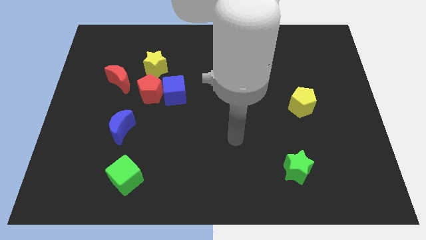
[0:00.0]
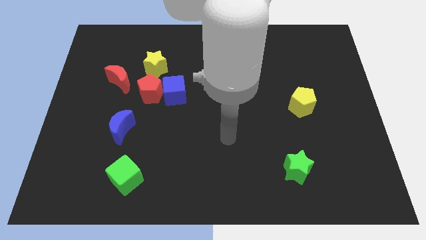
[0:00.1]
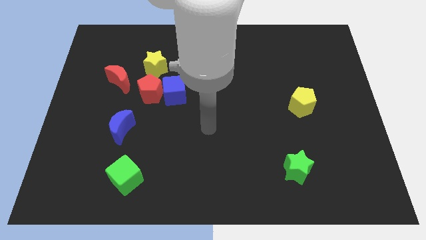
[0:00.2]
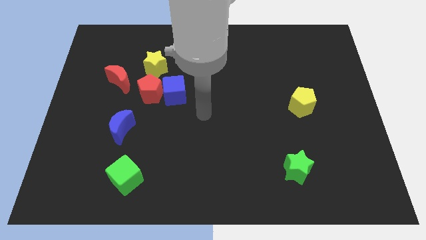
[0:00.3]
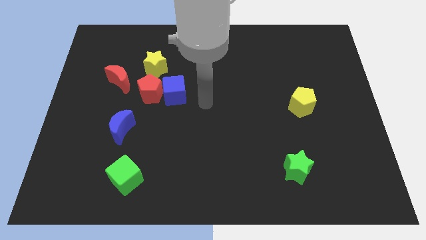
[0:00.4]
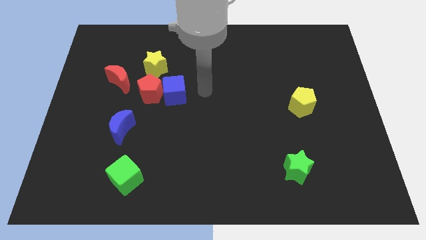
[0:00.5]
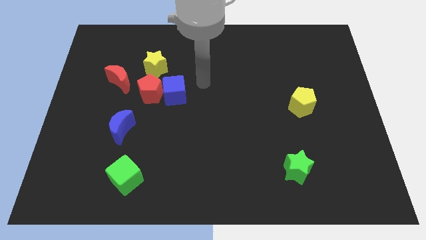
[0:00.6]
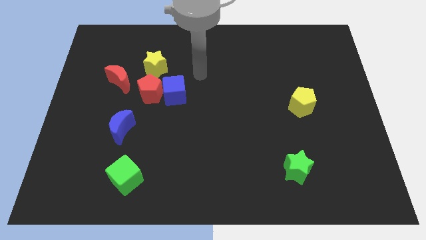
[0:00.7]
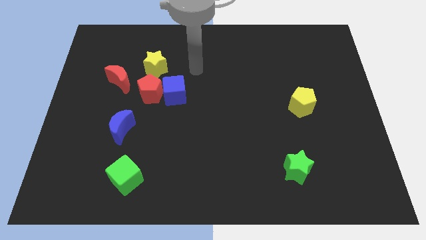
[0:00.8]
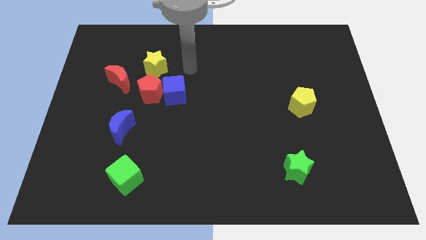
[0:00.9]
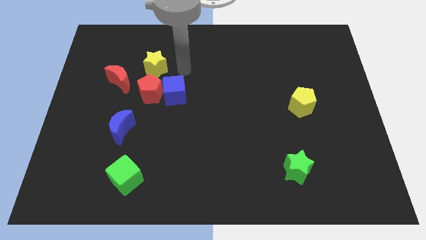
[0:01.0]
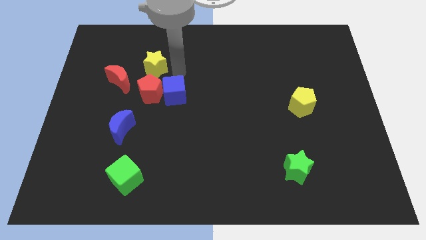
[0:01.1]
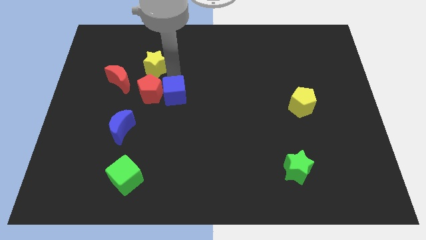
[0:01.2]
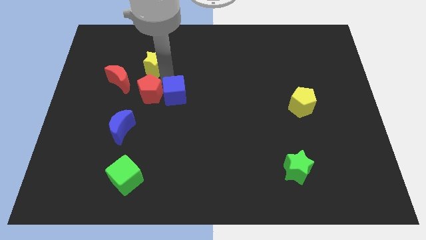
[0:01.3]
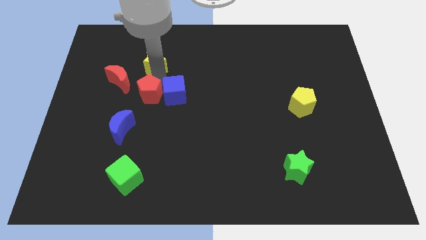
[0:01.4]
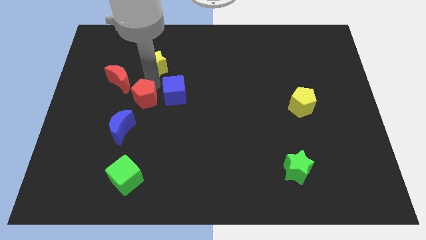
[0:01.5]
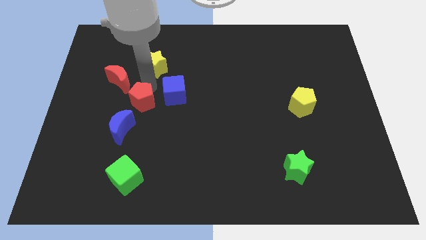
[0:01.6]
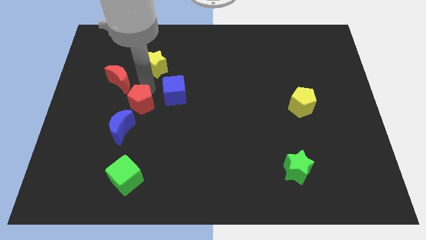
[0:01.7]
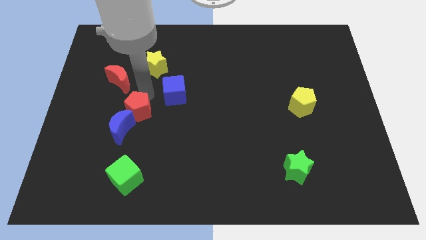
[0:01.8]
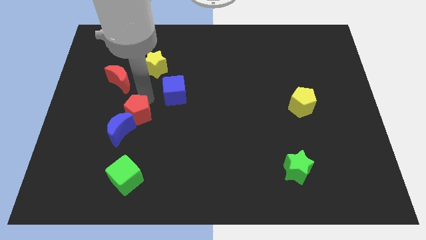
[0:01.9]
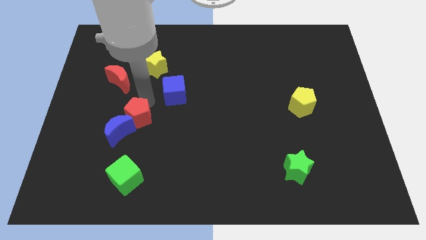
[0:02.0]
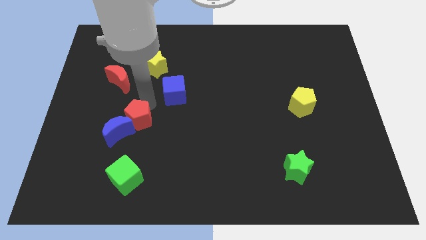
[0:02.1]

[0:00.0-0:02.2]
put the red pentagon to the blue moon

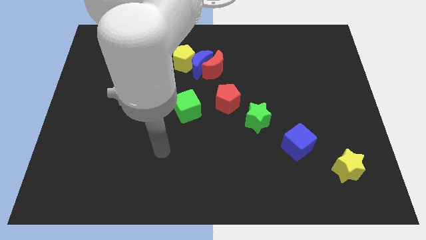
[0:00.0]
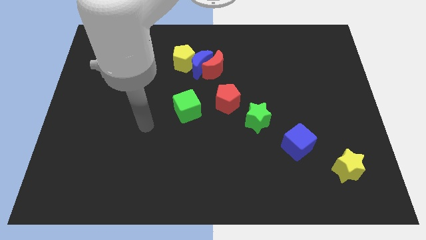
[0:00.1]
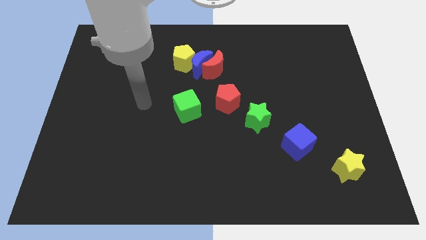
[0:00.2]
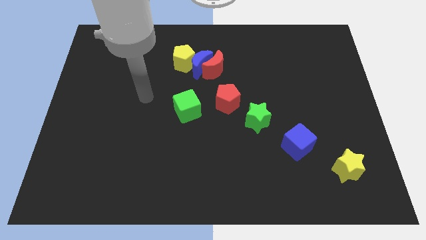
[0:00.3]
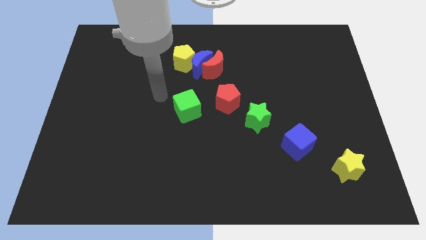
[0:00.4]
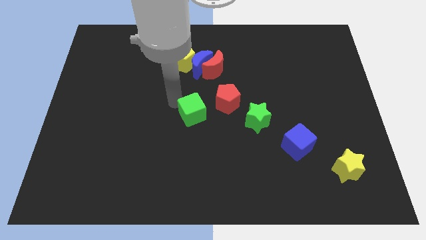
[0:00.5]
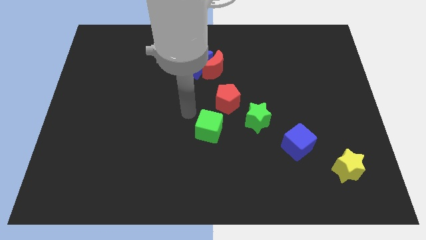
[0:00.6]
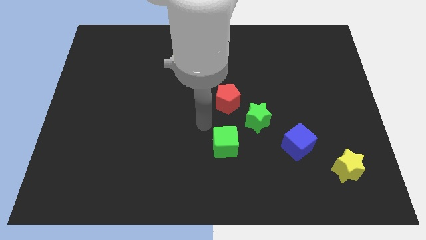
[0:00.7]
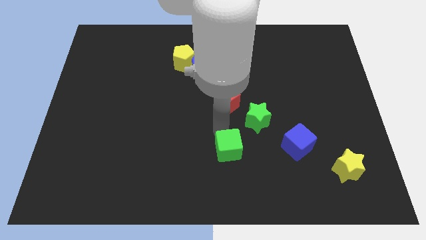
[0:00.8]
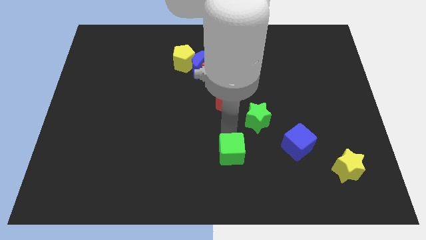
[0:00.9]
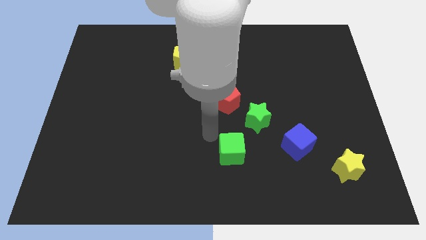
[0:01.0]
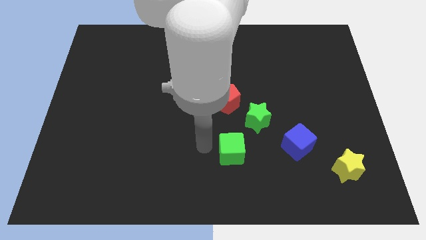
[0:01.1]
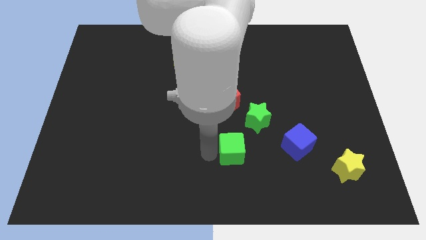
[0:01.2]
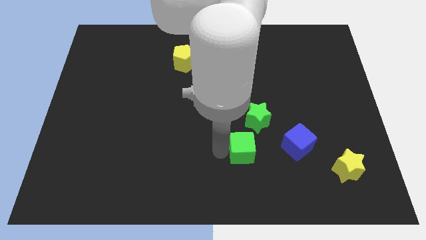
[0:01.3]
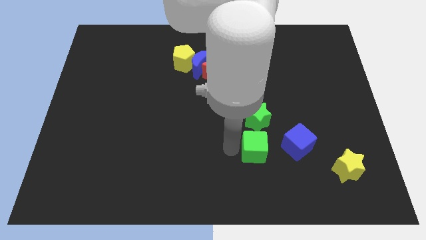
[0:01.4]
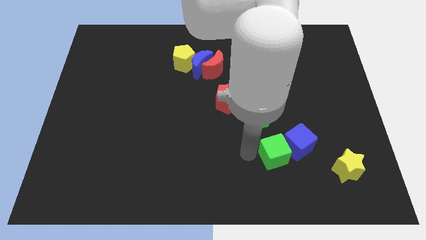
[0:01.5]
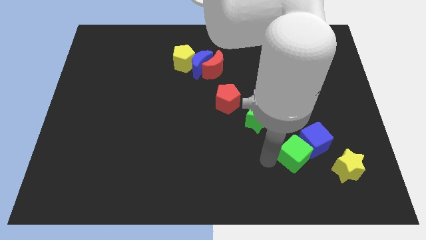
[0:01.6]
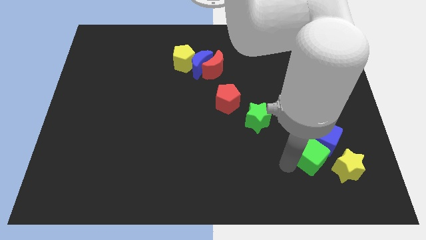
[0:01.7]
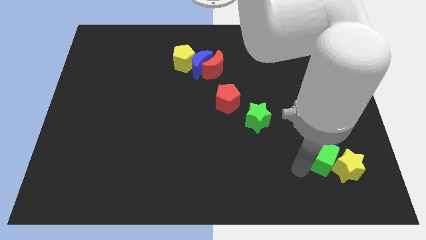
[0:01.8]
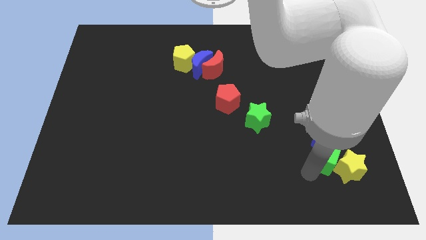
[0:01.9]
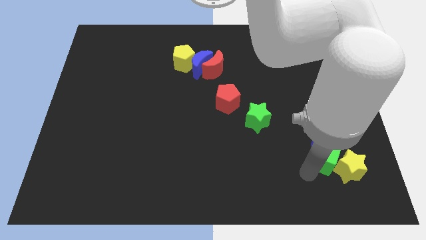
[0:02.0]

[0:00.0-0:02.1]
slide the green cube towards the yellow star

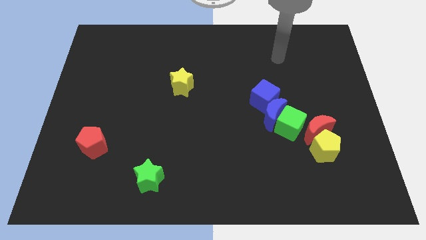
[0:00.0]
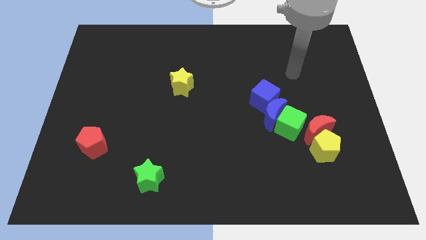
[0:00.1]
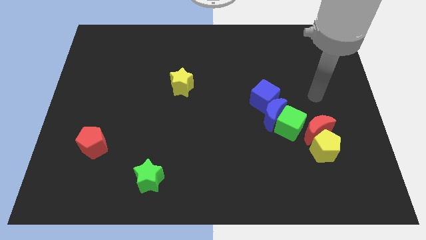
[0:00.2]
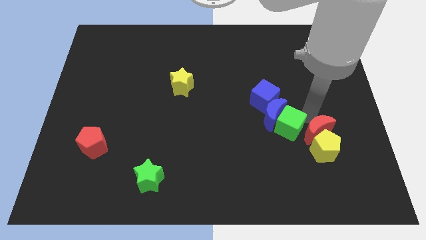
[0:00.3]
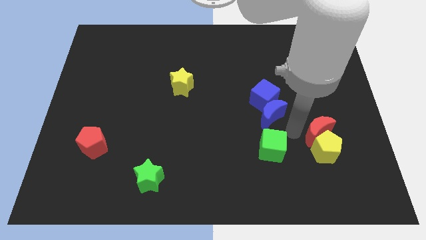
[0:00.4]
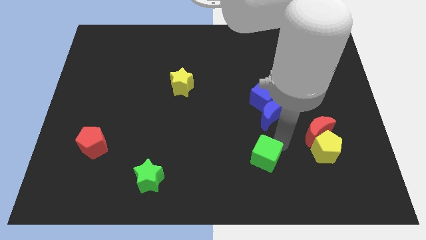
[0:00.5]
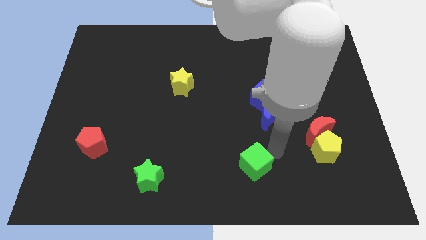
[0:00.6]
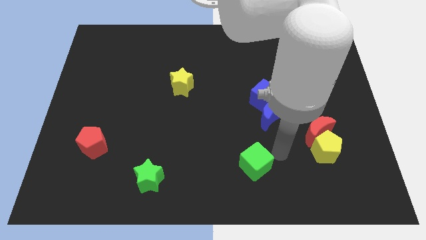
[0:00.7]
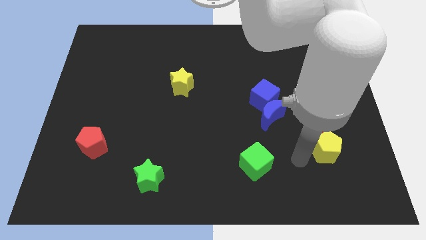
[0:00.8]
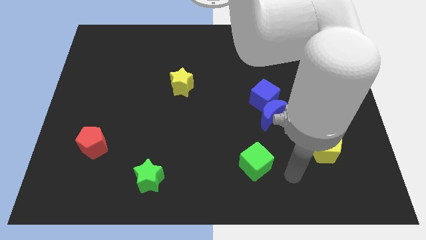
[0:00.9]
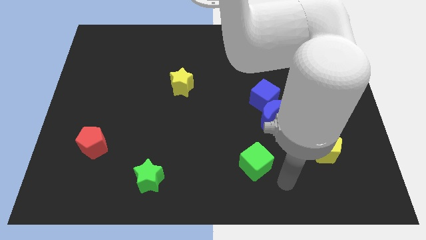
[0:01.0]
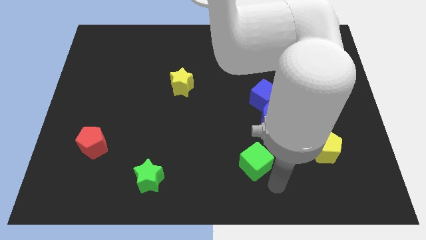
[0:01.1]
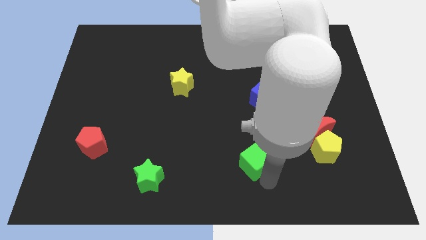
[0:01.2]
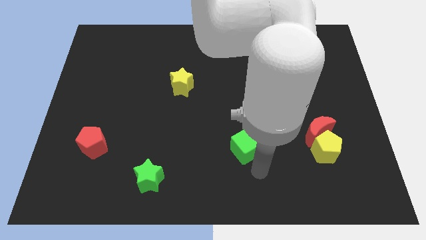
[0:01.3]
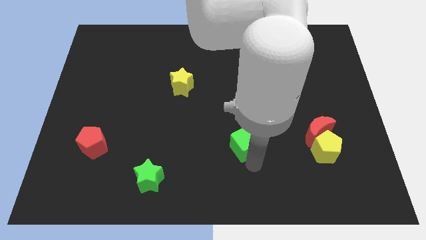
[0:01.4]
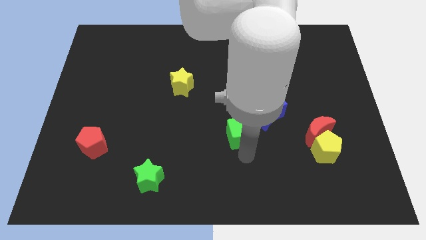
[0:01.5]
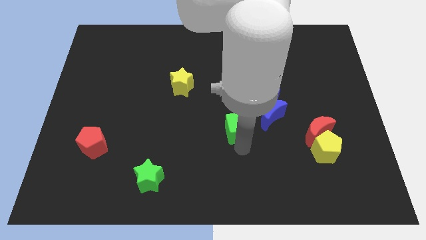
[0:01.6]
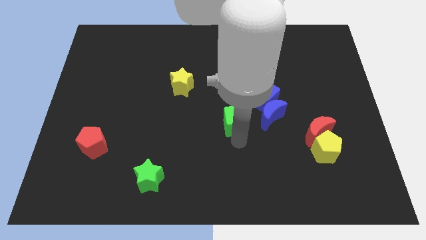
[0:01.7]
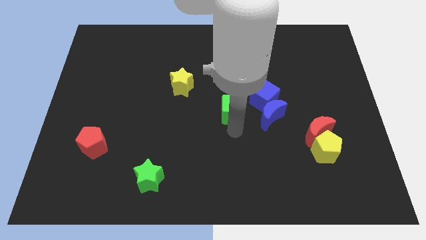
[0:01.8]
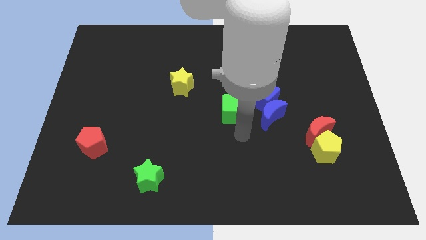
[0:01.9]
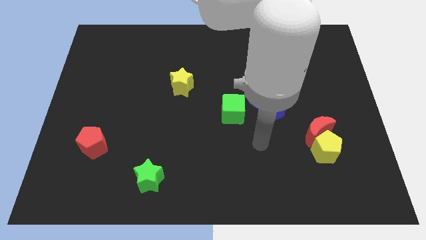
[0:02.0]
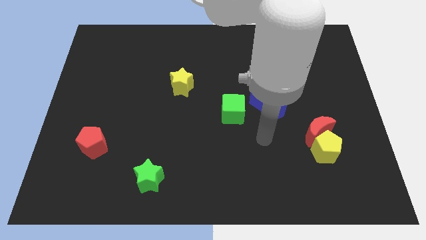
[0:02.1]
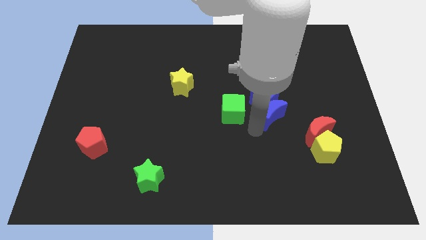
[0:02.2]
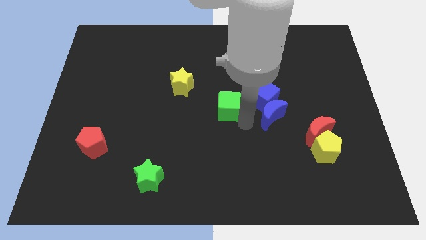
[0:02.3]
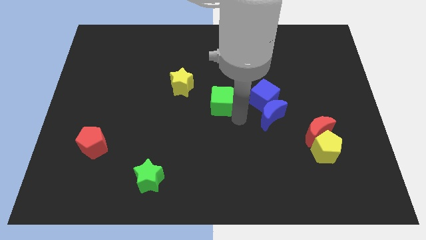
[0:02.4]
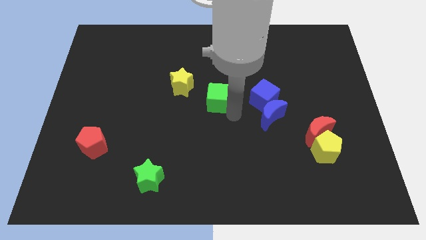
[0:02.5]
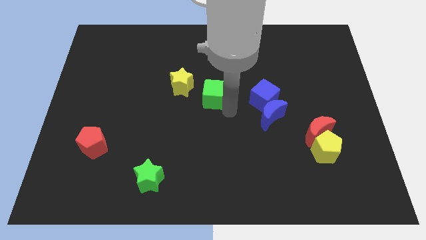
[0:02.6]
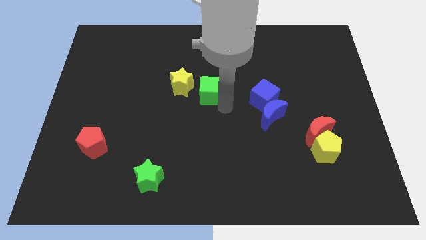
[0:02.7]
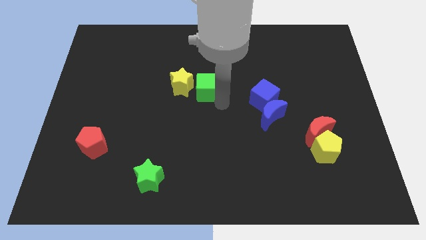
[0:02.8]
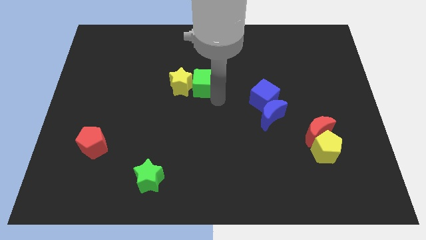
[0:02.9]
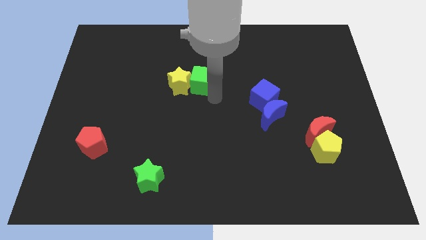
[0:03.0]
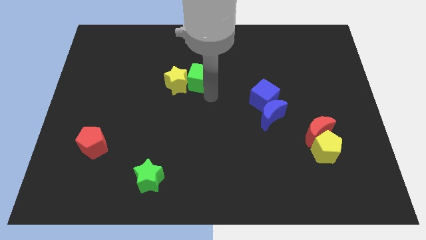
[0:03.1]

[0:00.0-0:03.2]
move the green cube to the yellow star

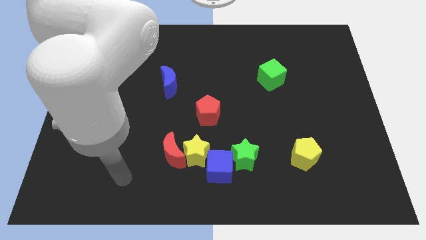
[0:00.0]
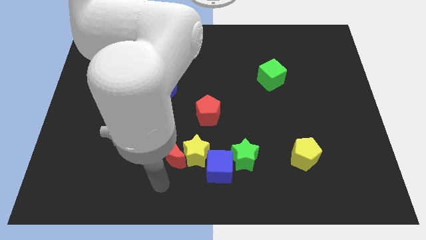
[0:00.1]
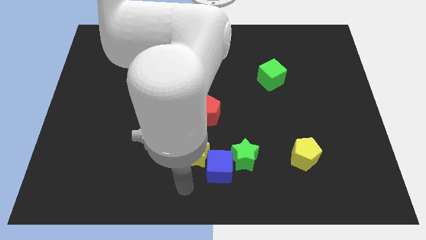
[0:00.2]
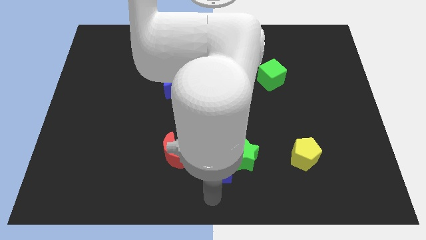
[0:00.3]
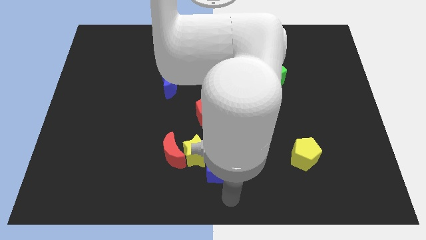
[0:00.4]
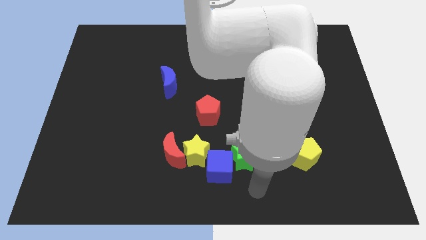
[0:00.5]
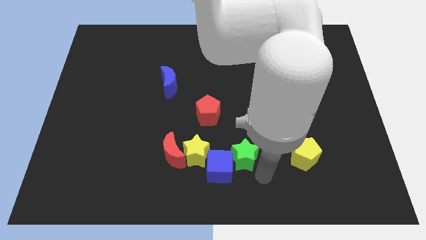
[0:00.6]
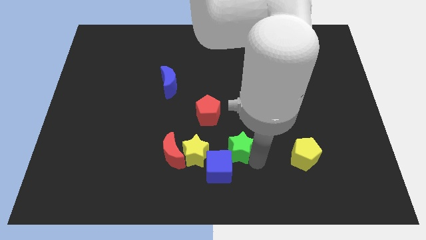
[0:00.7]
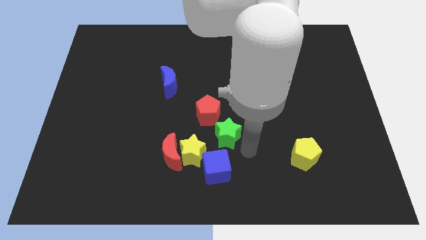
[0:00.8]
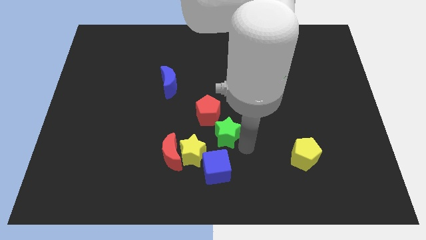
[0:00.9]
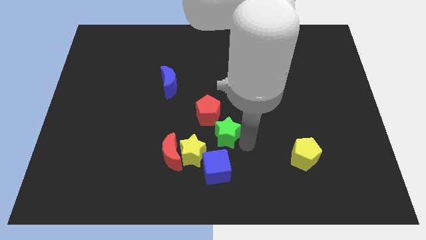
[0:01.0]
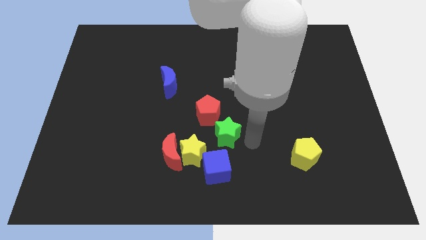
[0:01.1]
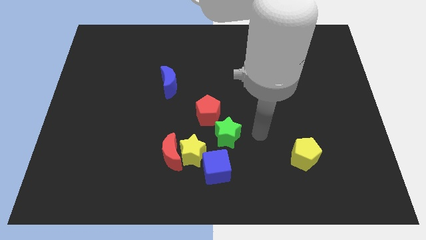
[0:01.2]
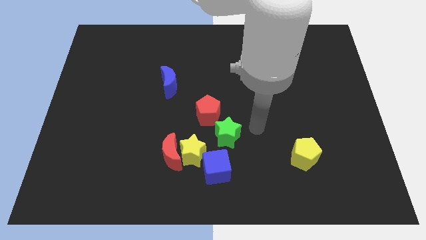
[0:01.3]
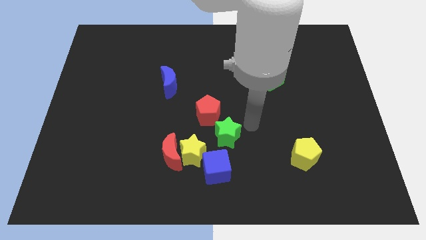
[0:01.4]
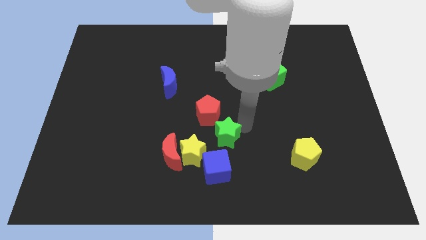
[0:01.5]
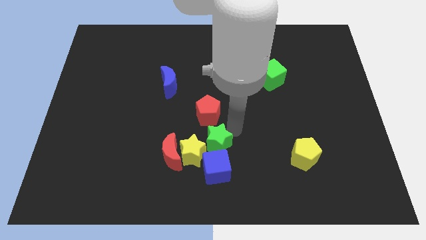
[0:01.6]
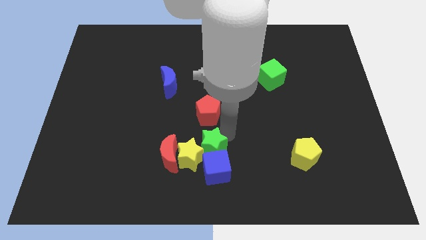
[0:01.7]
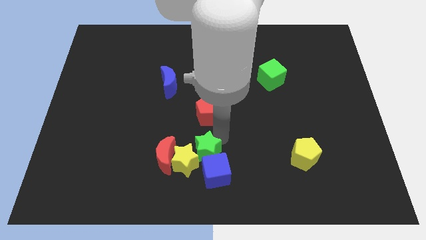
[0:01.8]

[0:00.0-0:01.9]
move the green star to the yellow star
